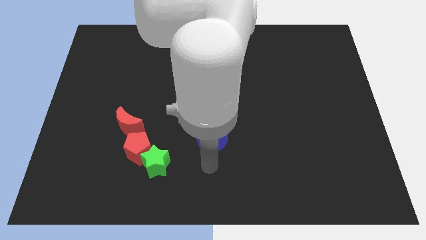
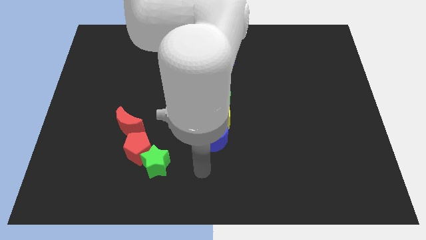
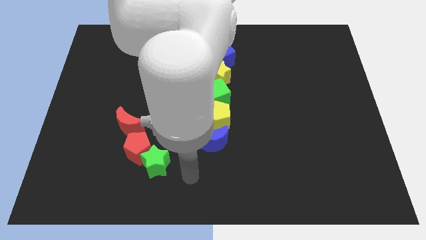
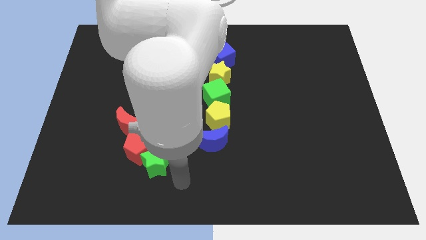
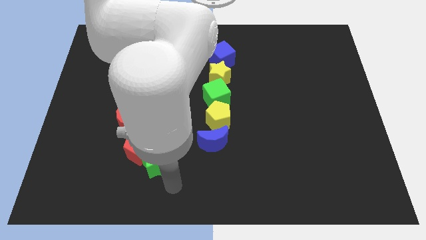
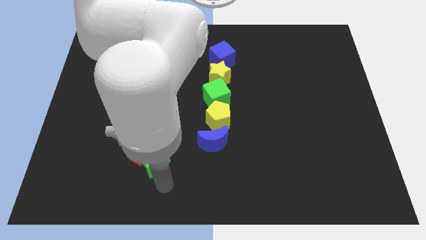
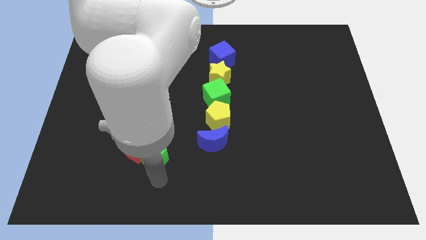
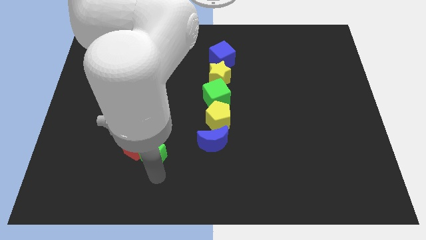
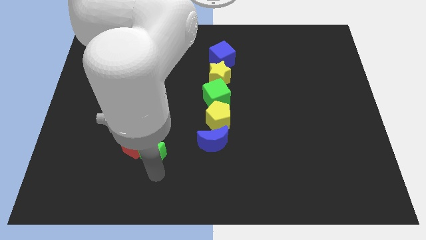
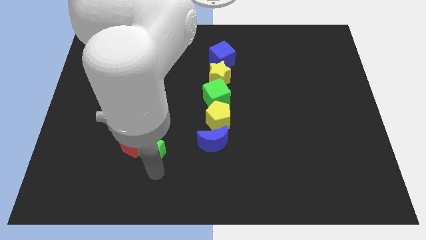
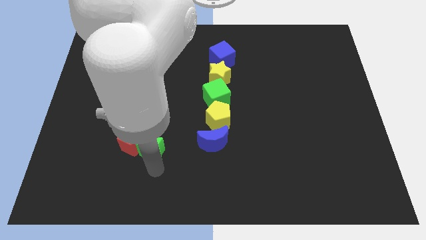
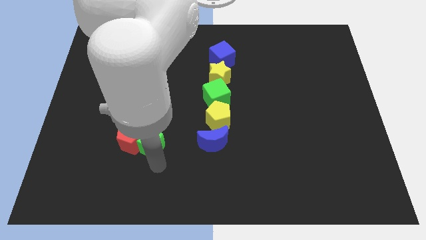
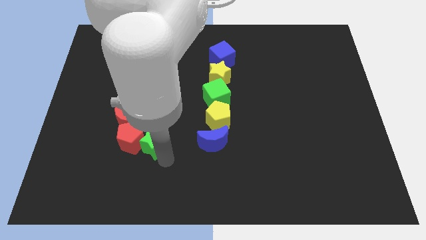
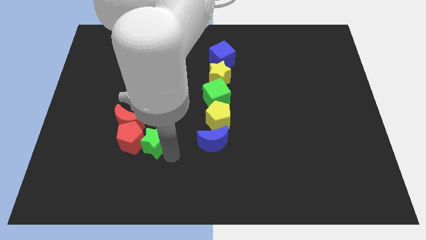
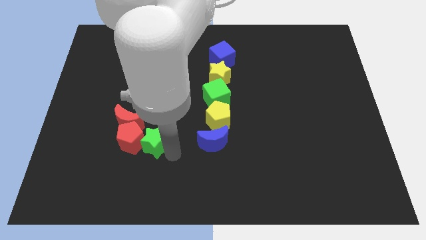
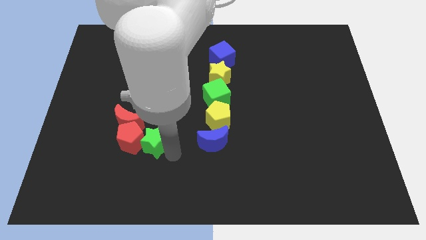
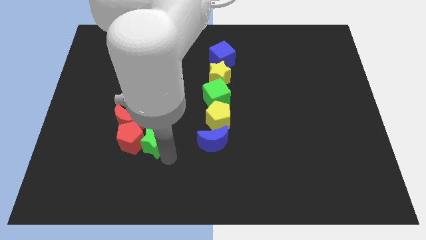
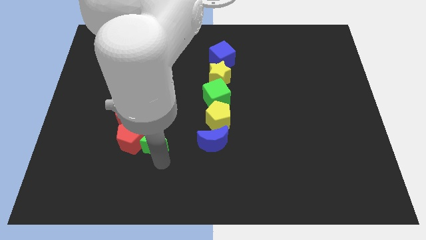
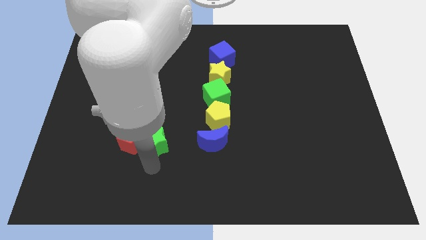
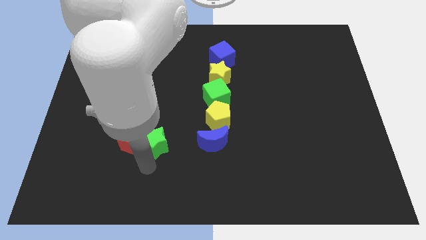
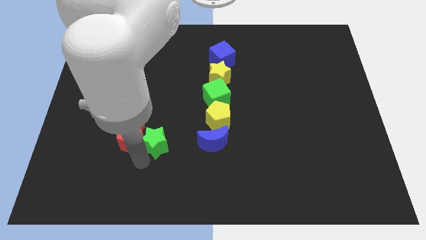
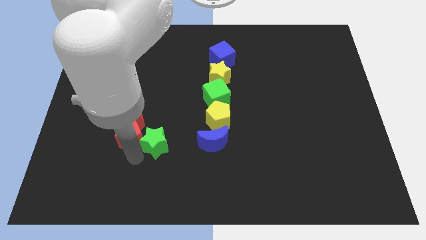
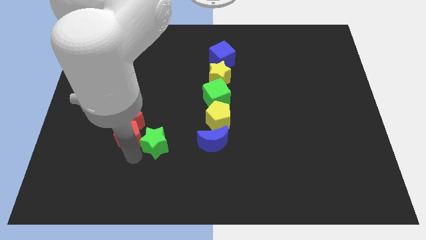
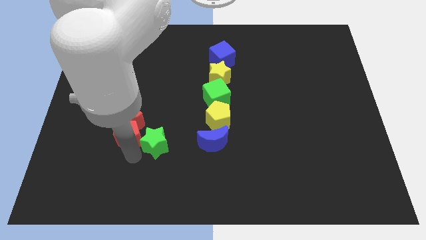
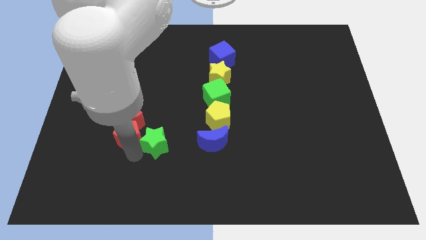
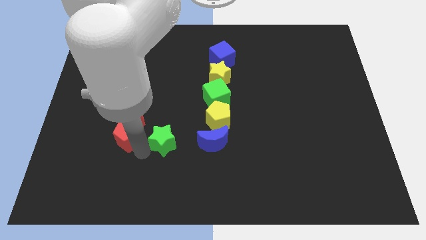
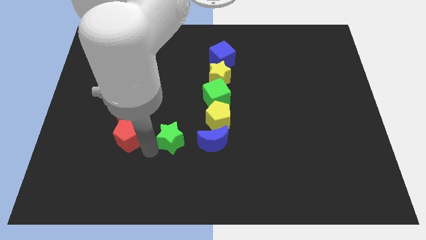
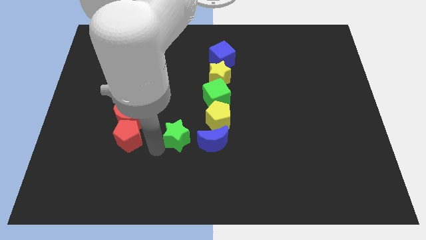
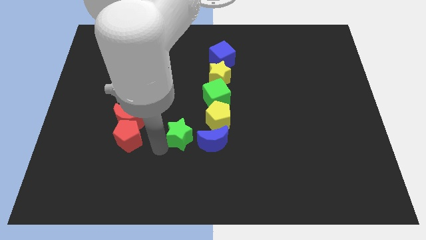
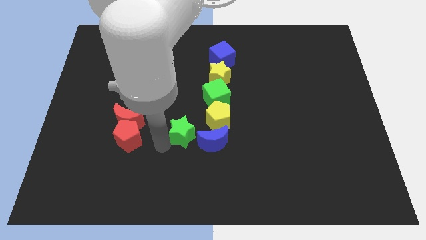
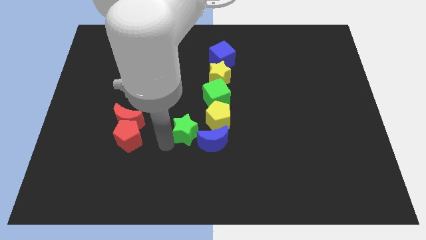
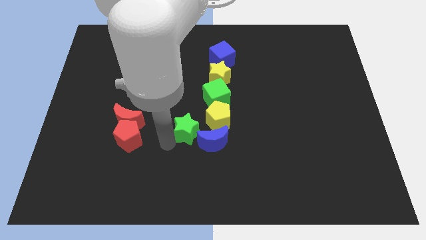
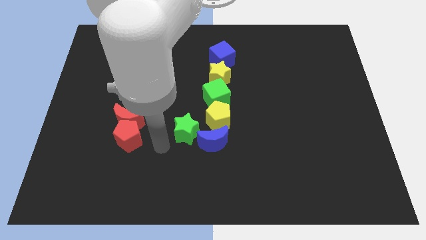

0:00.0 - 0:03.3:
move the green star to the left of the blue crescent

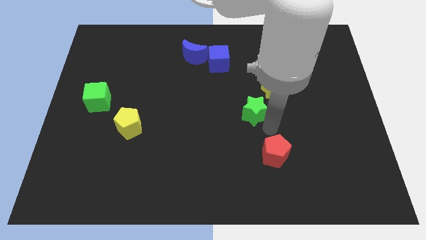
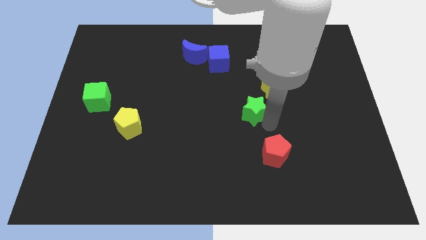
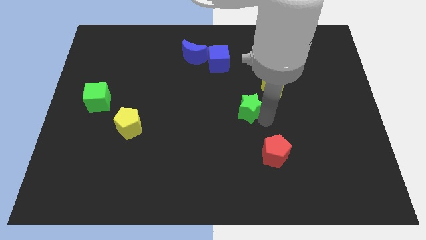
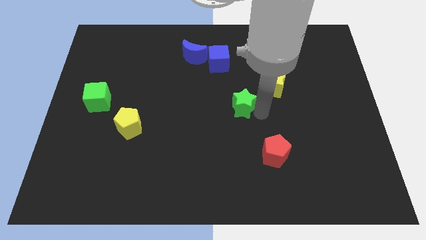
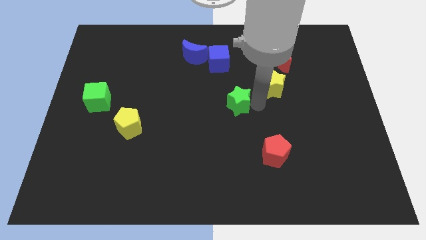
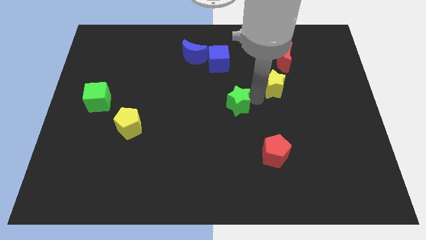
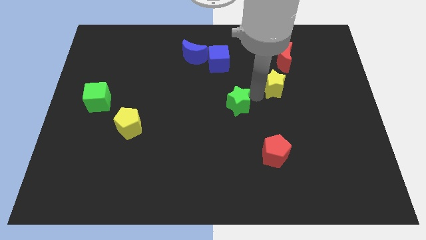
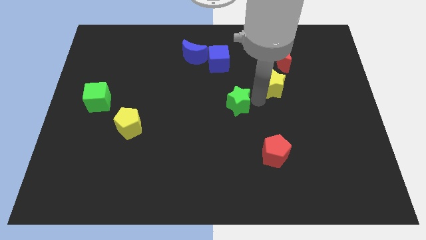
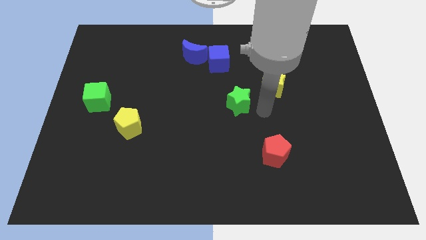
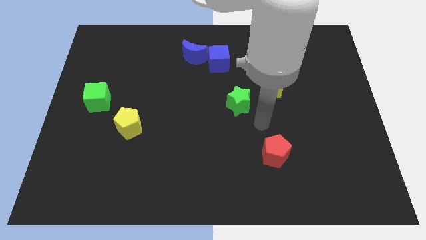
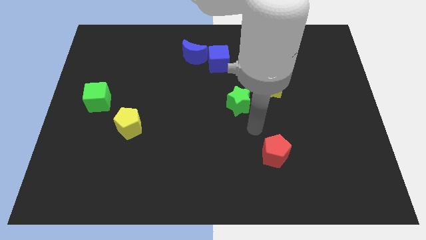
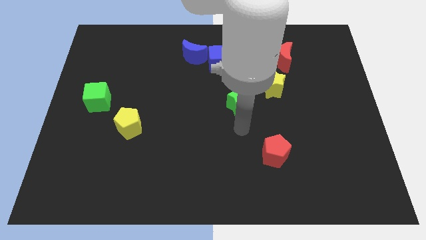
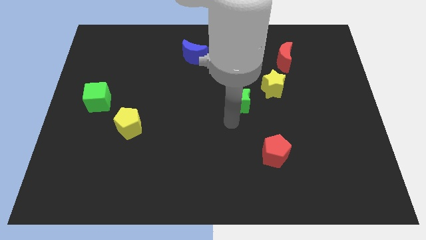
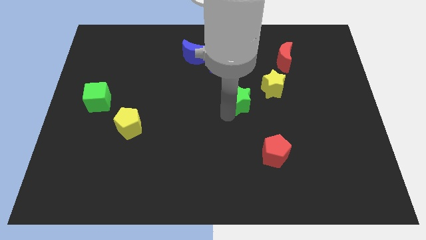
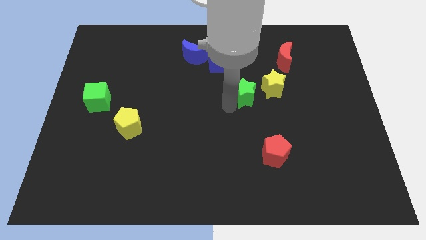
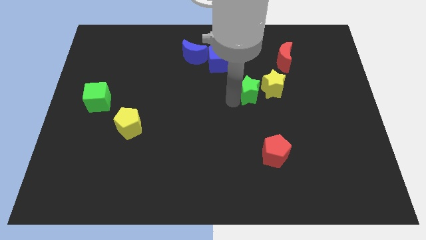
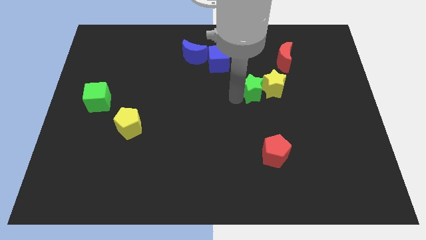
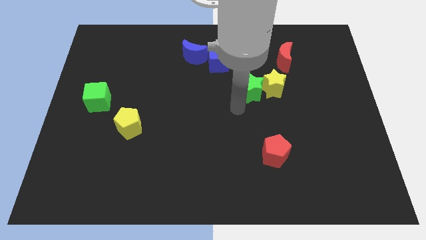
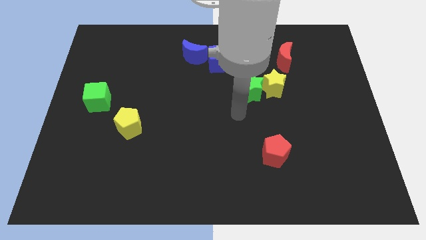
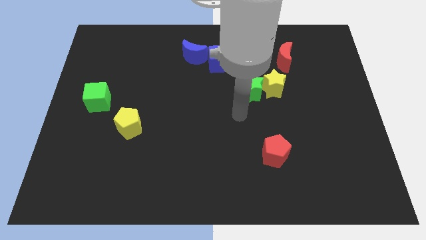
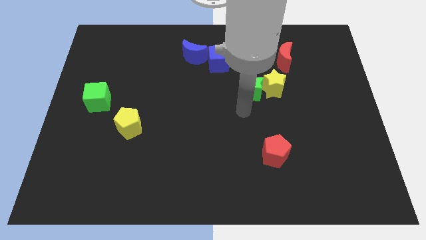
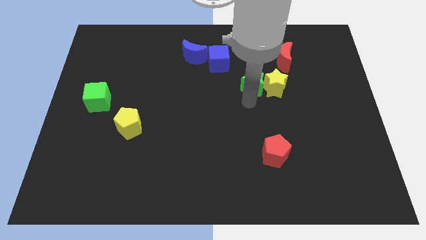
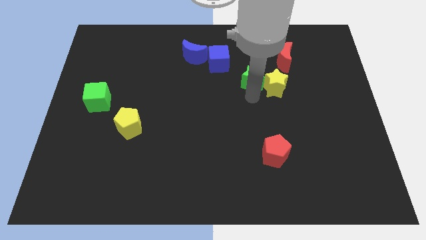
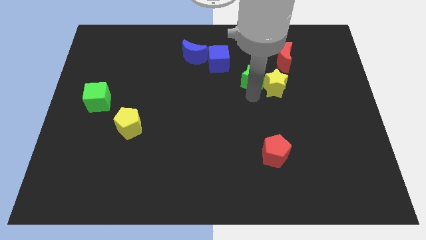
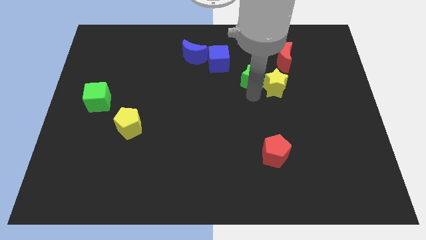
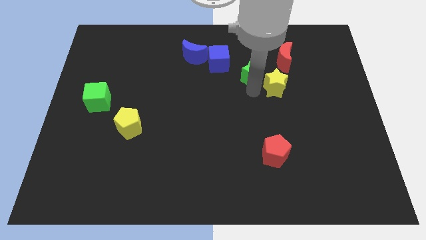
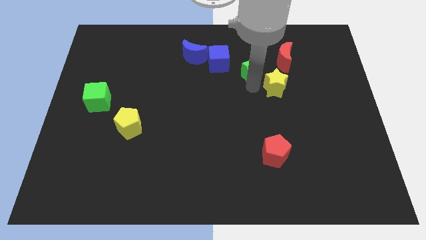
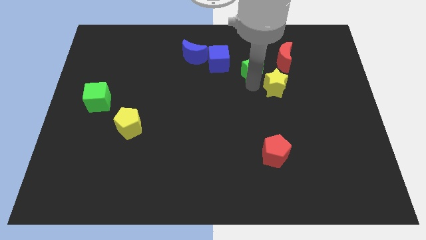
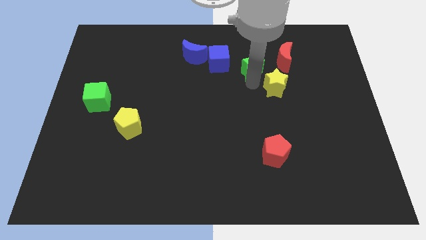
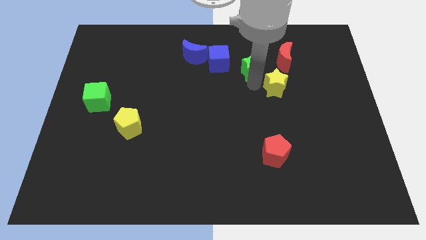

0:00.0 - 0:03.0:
push the green star towards the right of the blue cube

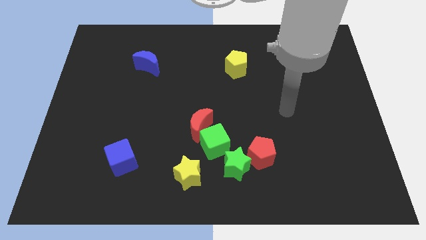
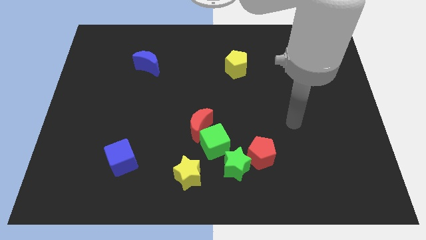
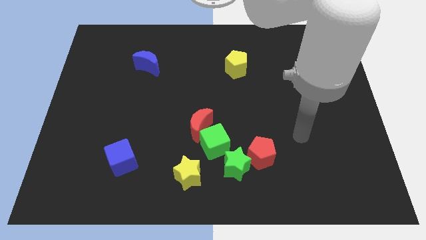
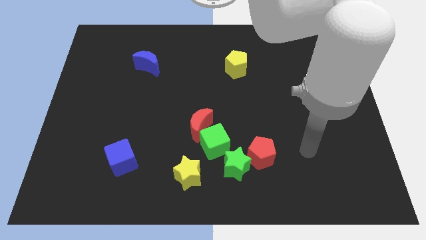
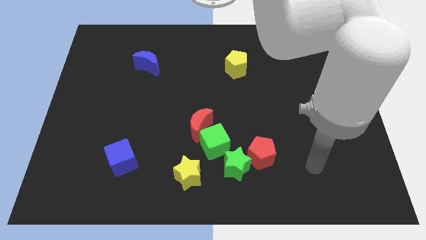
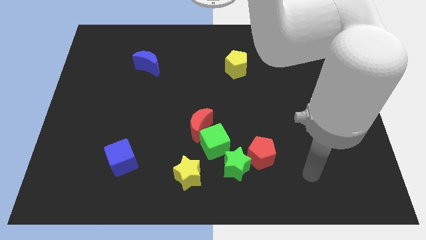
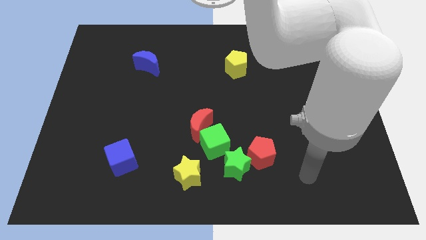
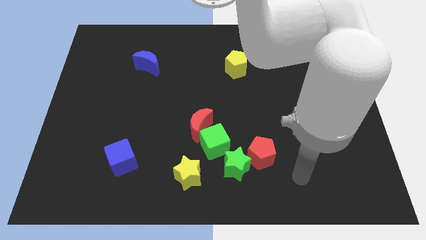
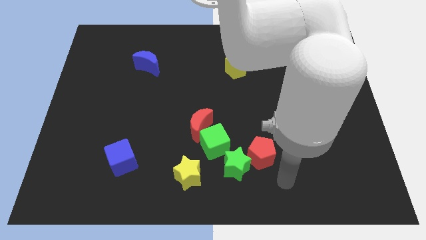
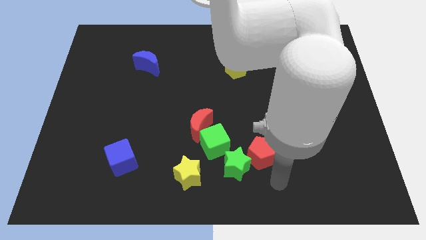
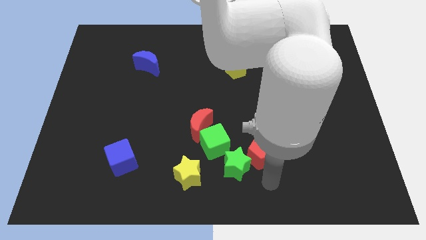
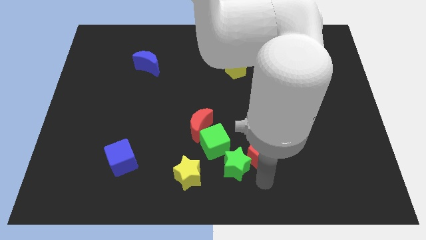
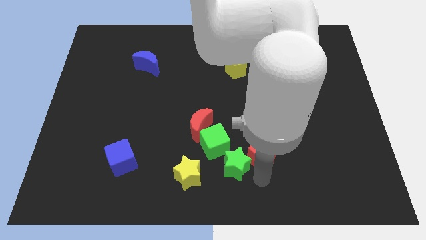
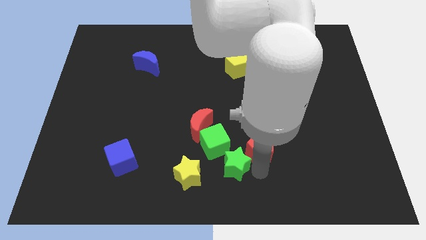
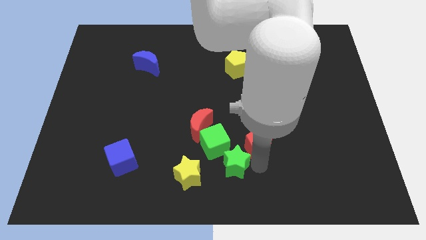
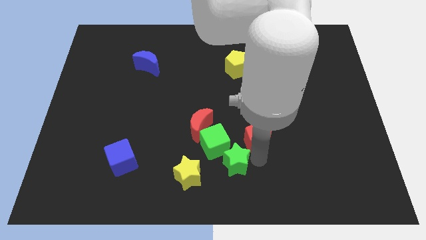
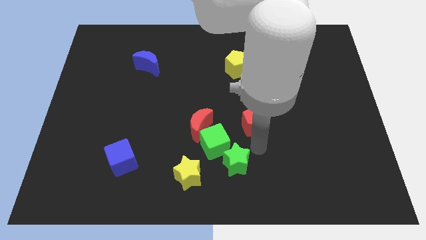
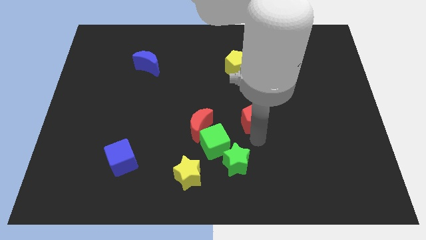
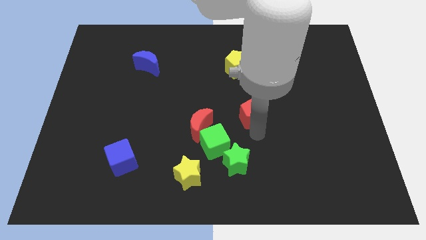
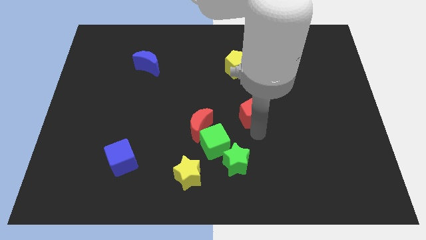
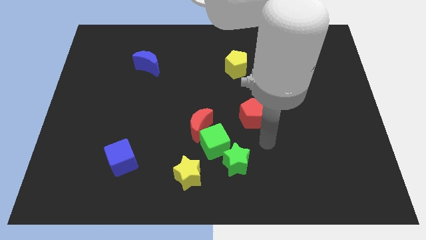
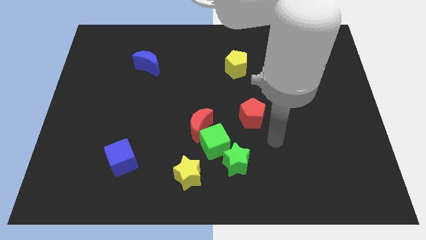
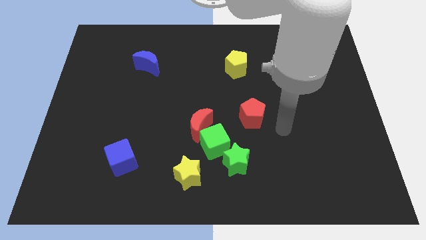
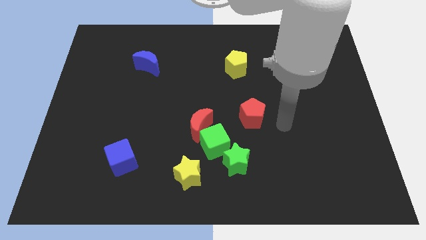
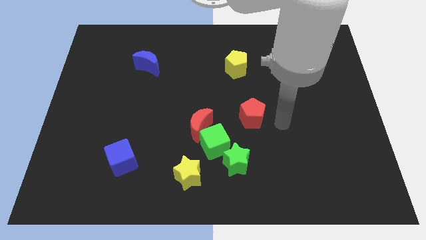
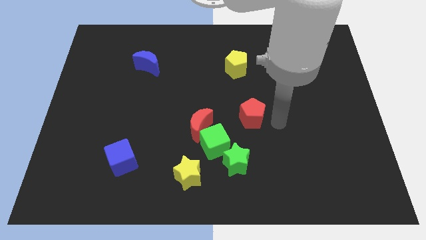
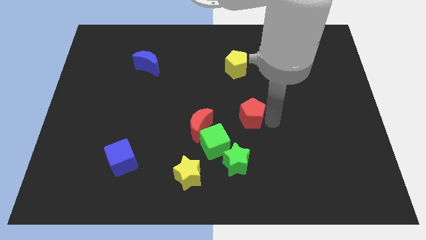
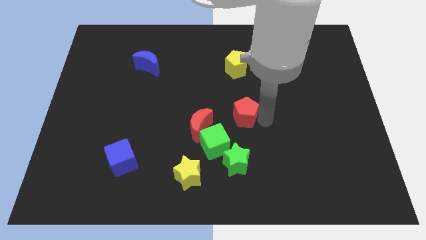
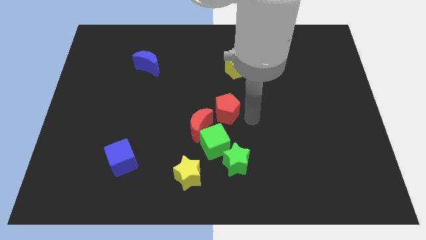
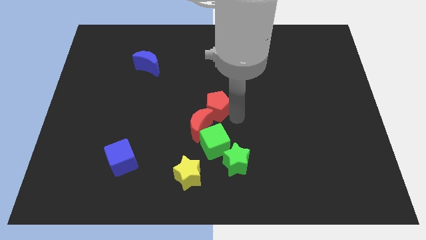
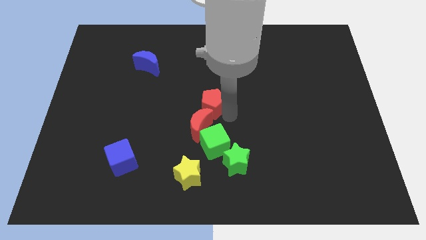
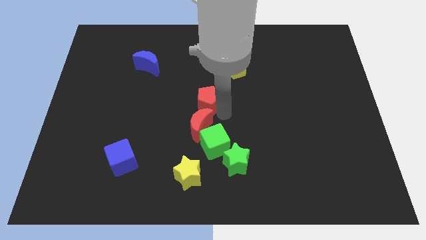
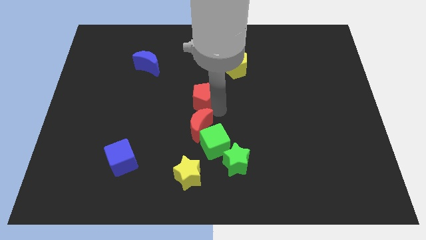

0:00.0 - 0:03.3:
push the red pentagon to the top side of the red crescent
